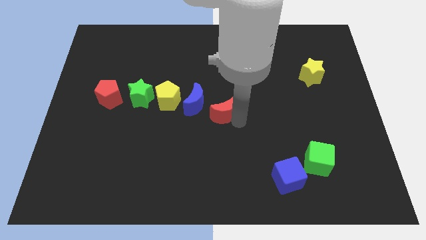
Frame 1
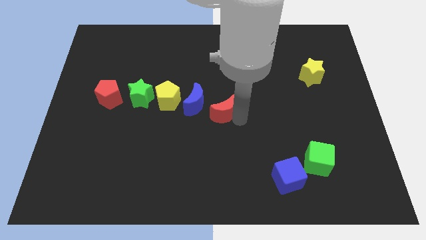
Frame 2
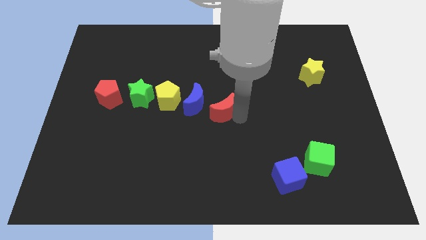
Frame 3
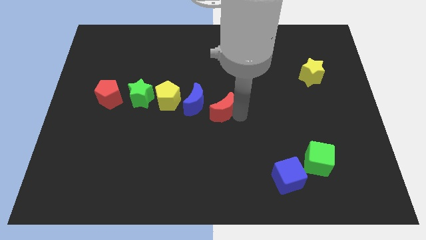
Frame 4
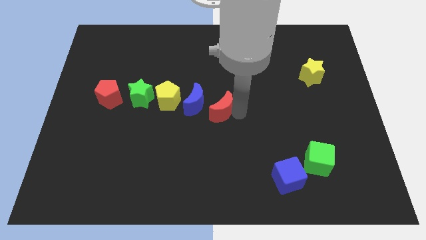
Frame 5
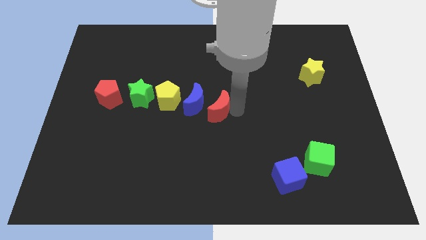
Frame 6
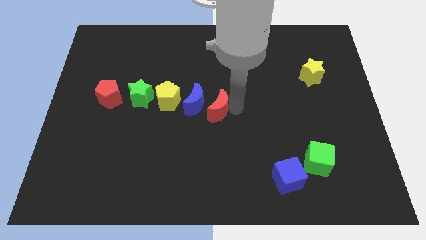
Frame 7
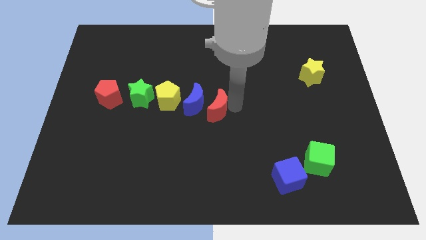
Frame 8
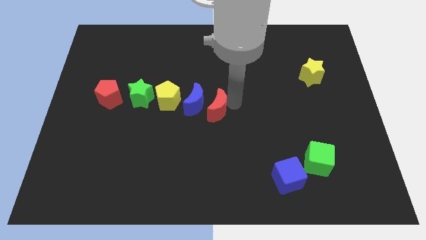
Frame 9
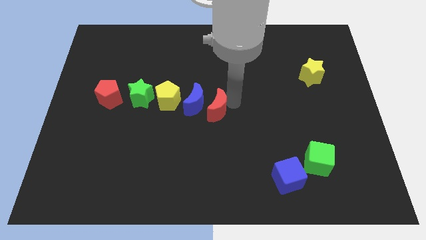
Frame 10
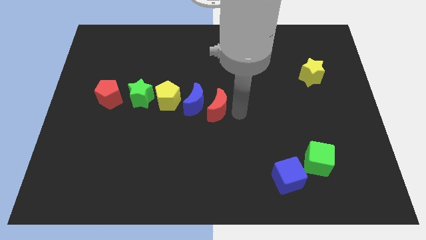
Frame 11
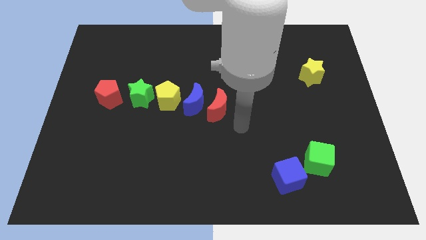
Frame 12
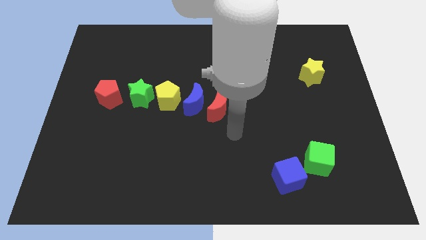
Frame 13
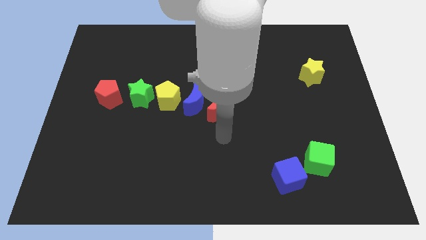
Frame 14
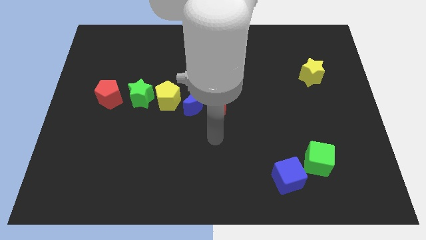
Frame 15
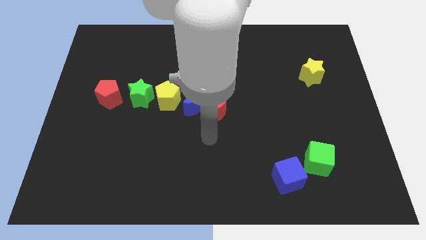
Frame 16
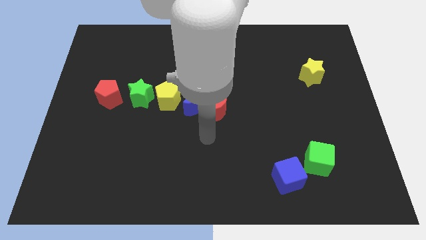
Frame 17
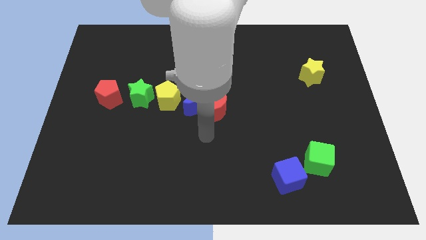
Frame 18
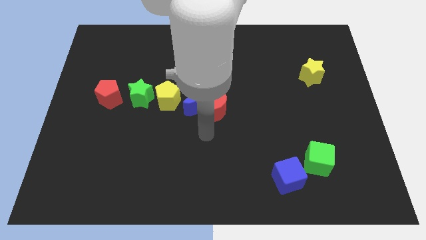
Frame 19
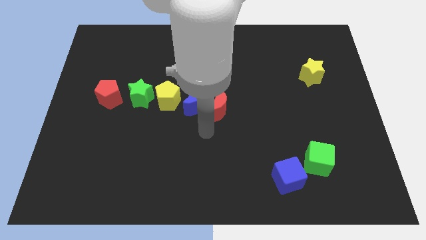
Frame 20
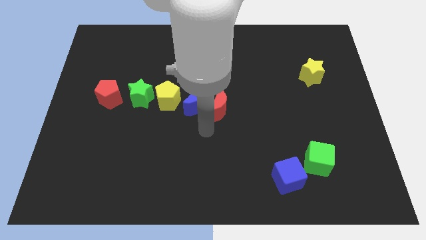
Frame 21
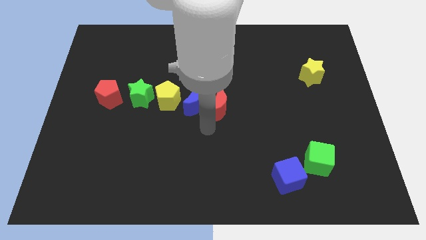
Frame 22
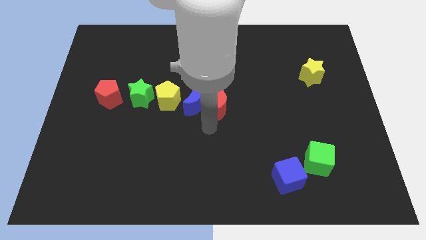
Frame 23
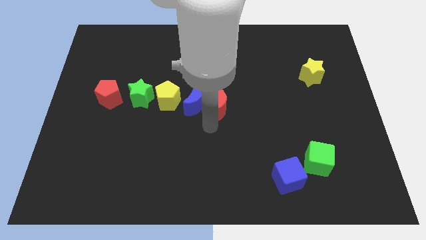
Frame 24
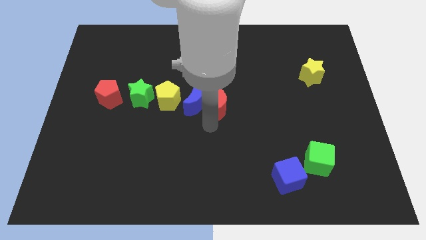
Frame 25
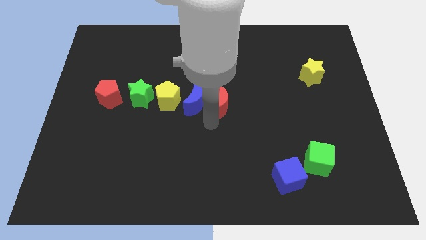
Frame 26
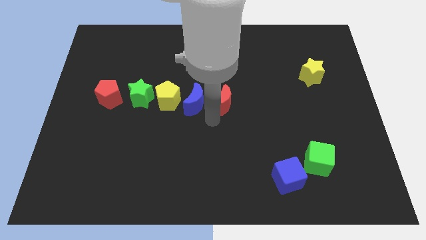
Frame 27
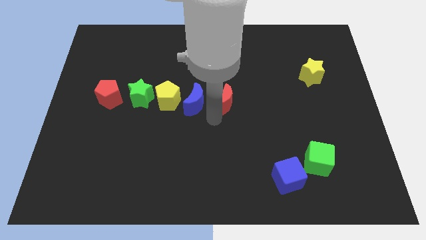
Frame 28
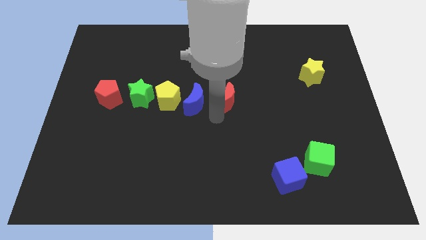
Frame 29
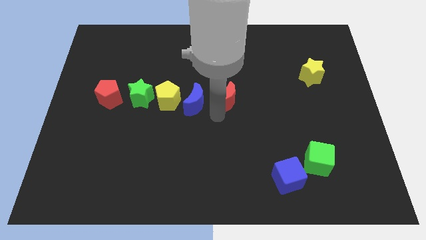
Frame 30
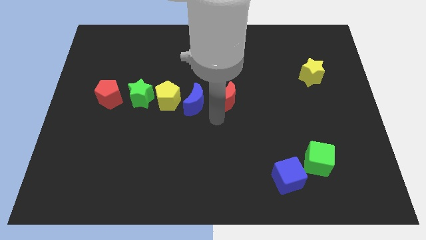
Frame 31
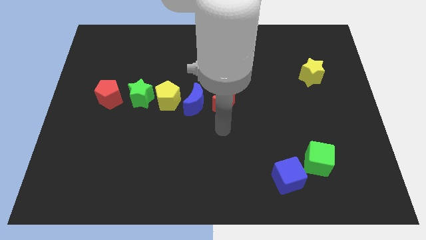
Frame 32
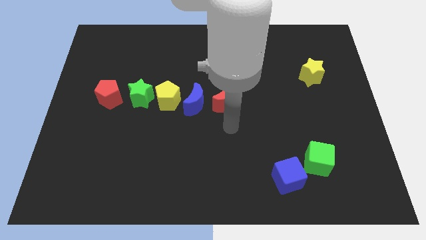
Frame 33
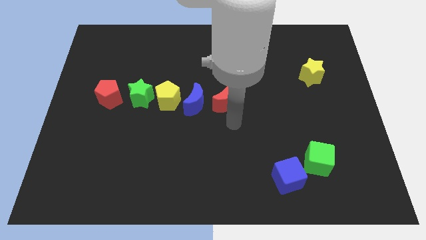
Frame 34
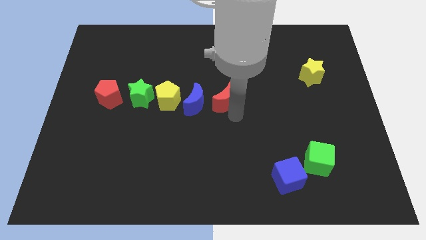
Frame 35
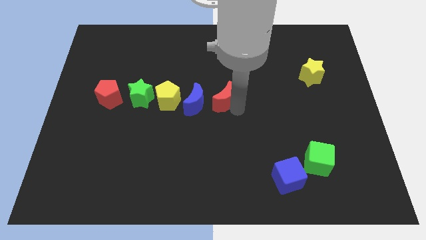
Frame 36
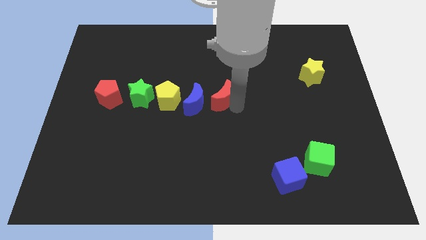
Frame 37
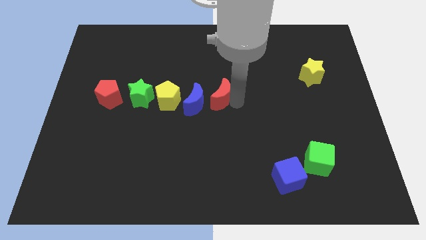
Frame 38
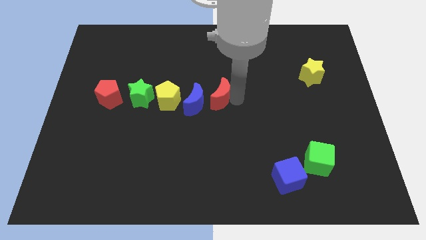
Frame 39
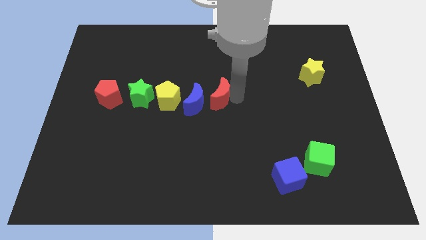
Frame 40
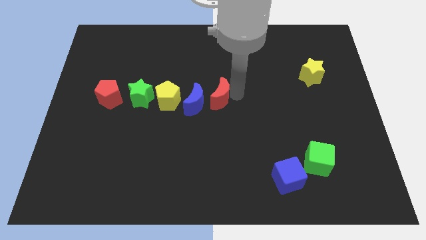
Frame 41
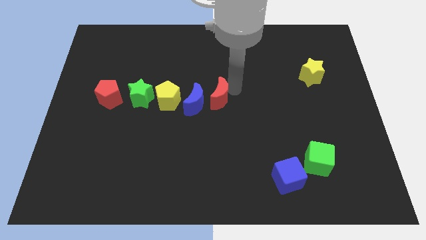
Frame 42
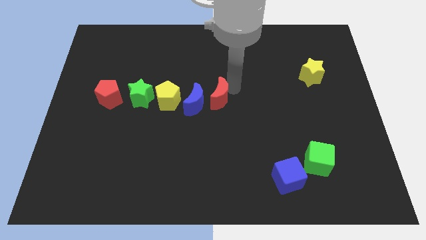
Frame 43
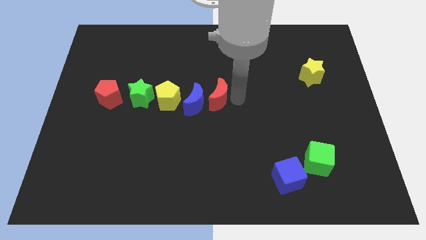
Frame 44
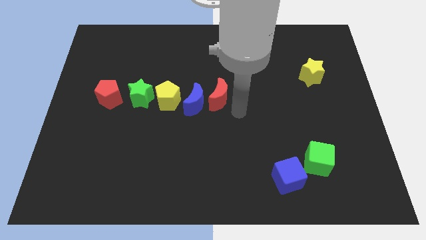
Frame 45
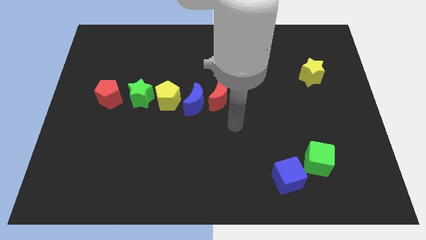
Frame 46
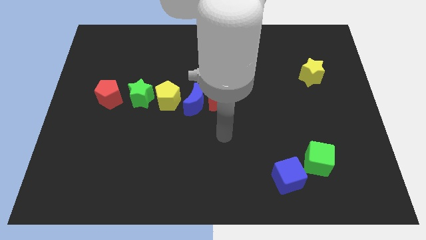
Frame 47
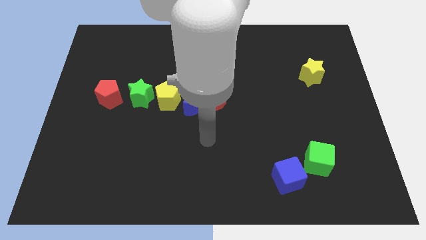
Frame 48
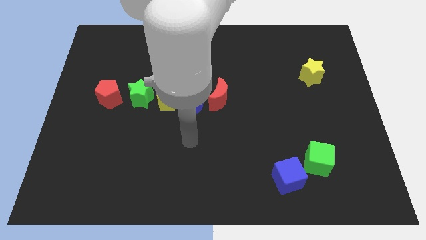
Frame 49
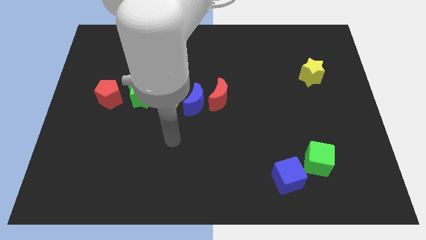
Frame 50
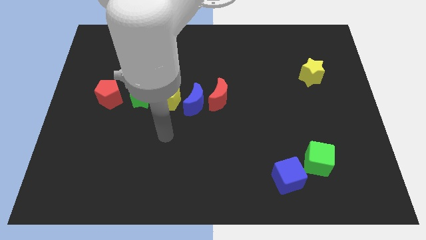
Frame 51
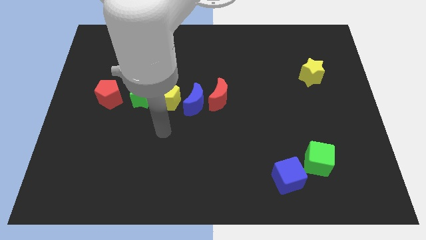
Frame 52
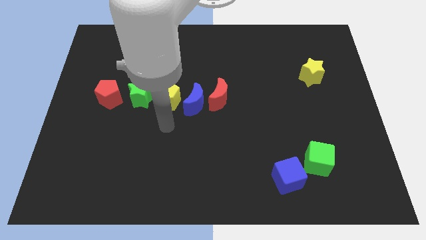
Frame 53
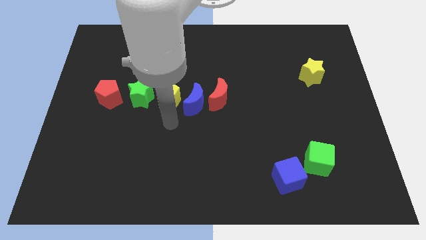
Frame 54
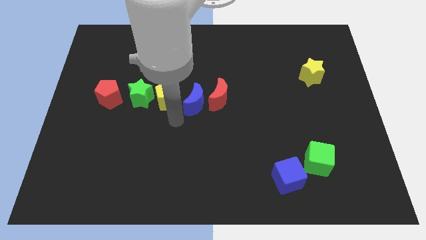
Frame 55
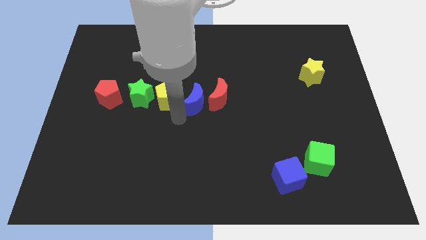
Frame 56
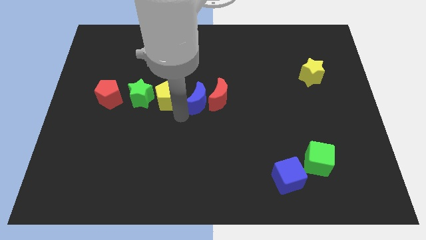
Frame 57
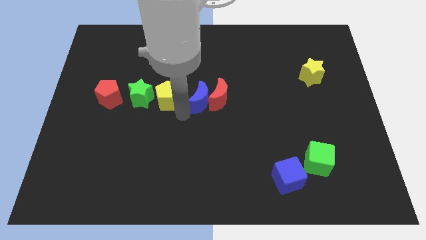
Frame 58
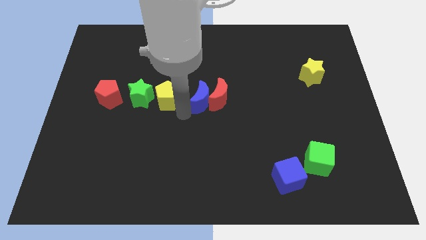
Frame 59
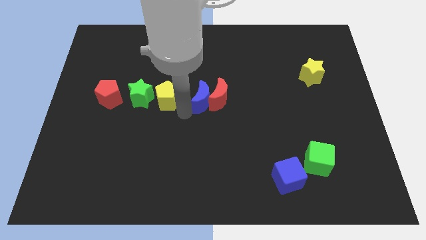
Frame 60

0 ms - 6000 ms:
move the red crescent right to the blue crescent

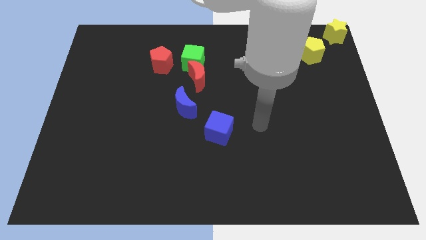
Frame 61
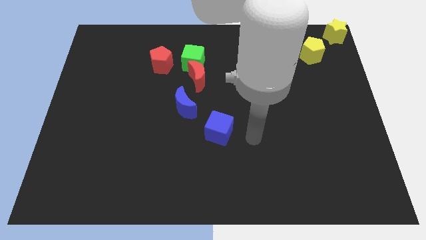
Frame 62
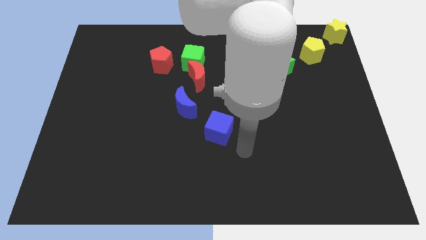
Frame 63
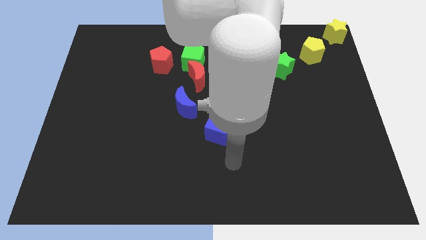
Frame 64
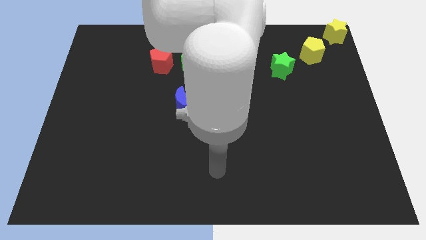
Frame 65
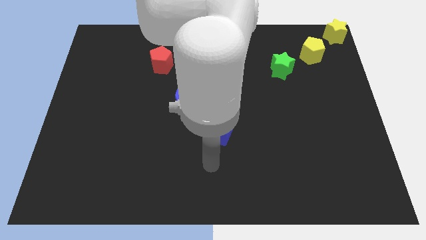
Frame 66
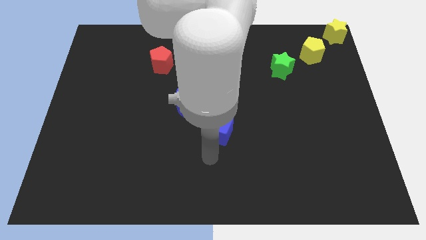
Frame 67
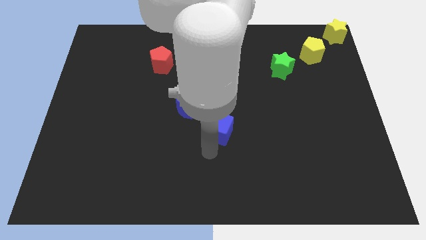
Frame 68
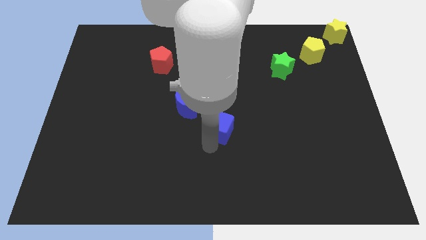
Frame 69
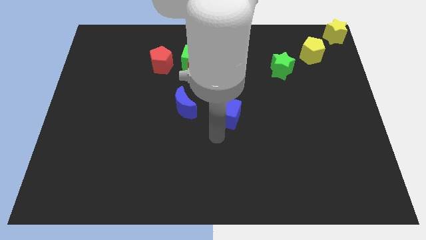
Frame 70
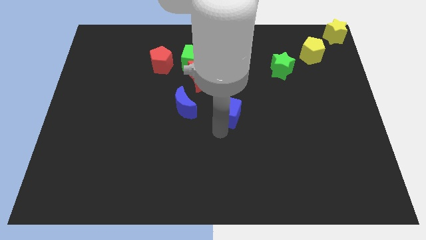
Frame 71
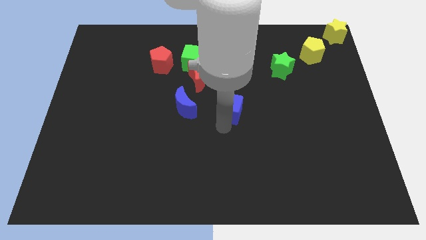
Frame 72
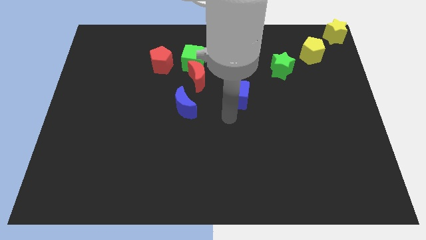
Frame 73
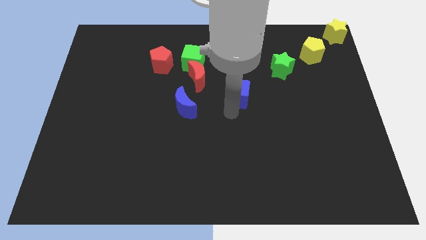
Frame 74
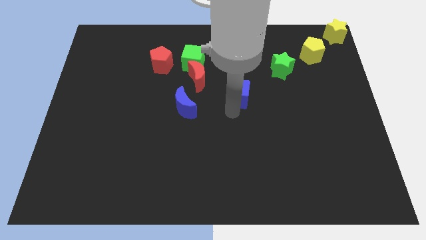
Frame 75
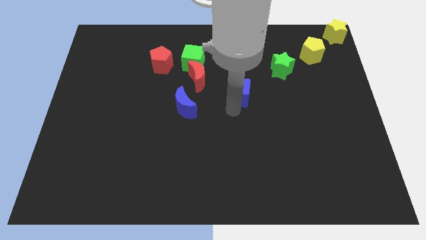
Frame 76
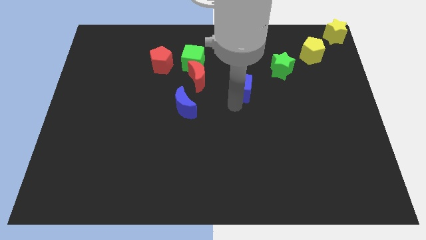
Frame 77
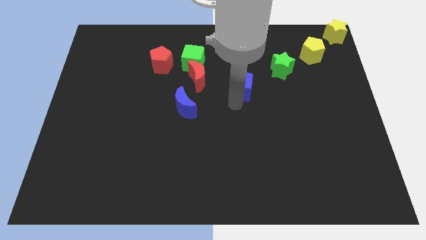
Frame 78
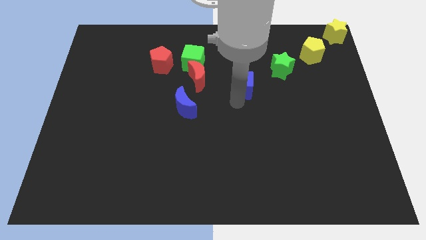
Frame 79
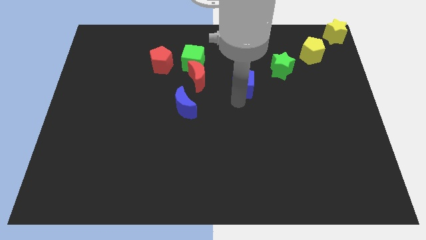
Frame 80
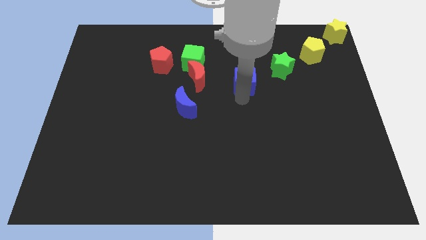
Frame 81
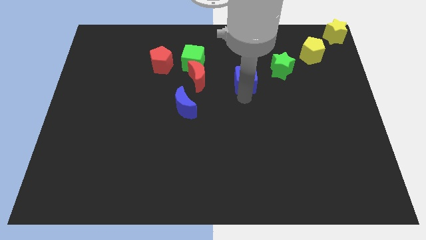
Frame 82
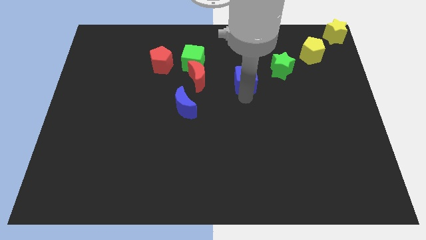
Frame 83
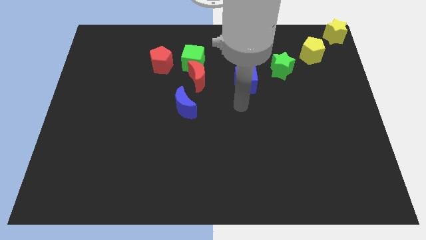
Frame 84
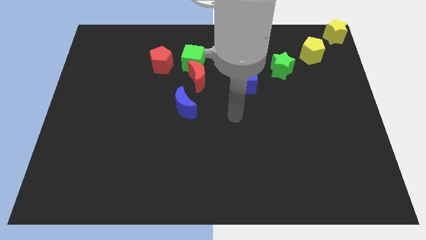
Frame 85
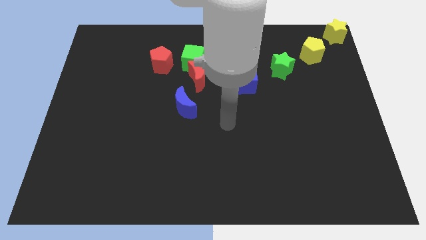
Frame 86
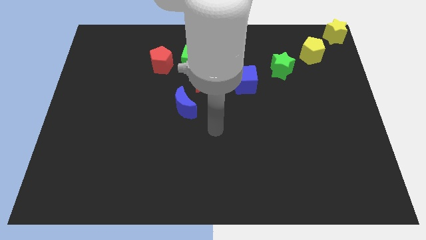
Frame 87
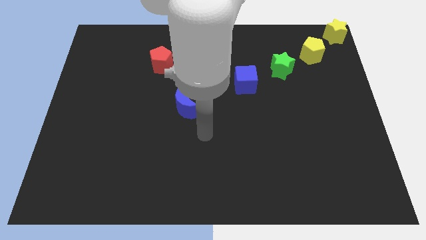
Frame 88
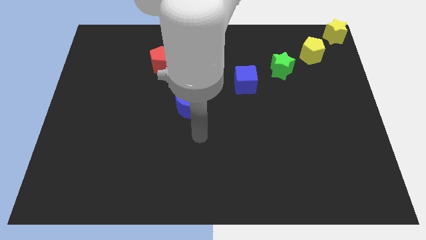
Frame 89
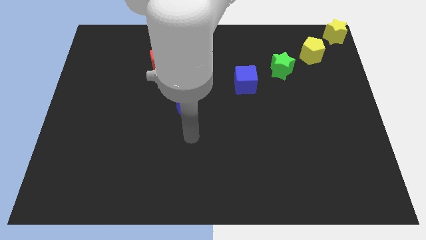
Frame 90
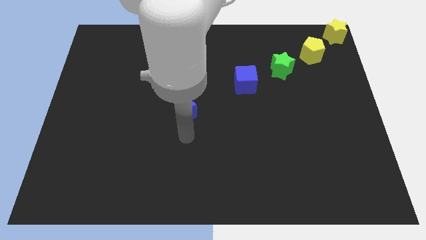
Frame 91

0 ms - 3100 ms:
push the blue cube diagonally bottom left to green star
